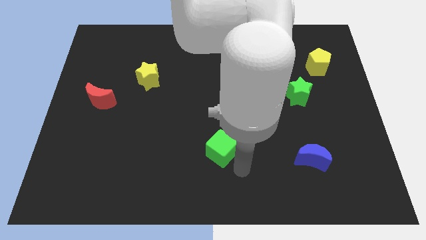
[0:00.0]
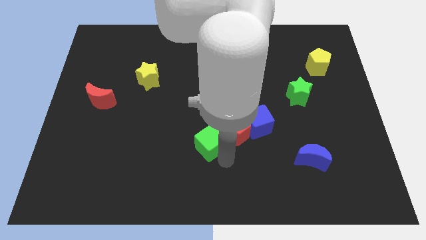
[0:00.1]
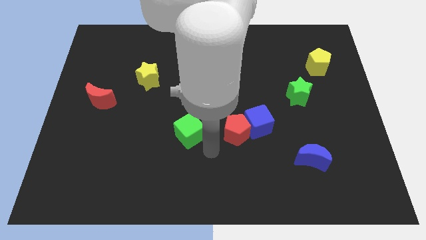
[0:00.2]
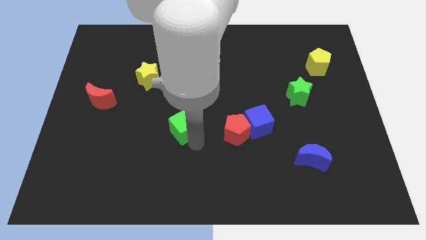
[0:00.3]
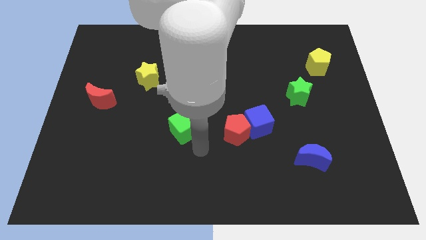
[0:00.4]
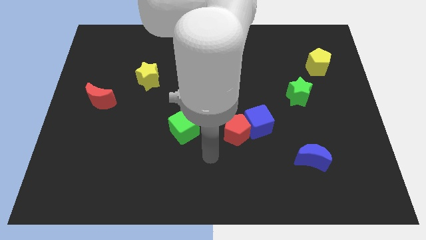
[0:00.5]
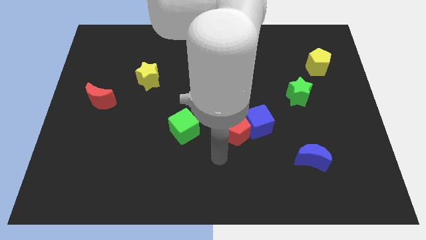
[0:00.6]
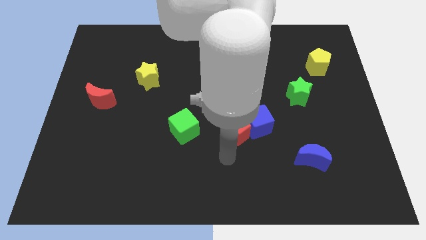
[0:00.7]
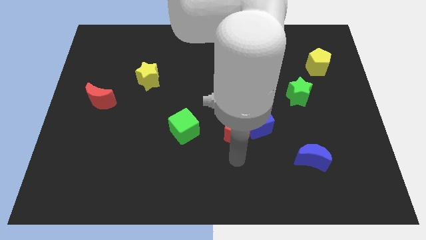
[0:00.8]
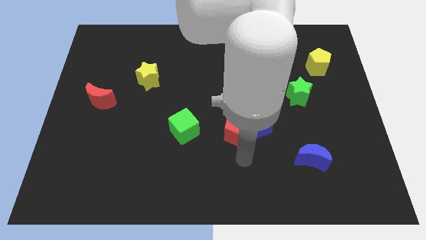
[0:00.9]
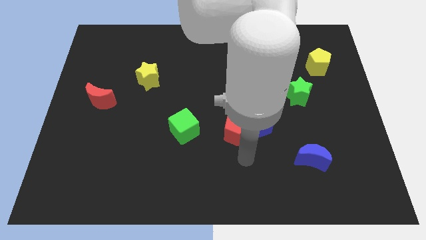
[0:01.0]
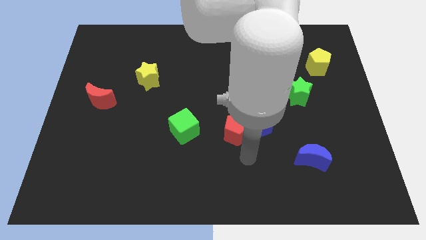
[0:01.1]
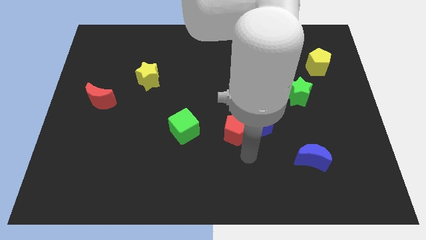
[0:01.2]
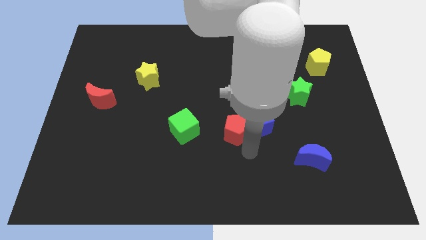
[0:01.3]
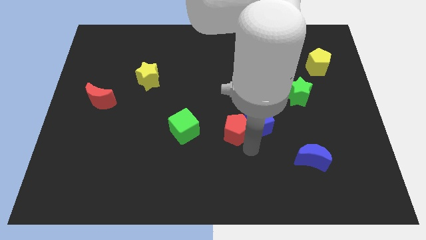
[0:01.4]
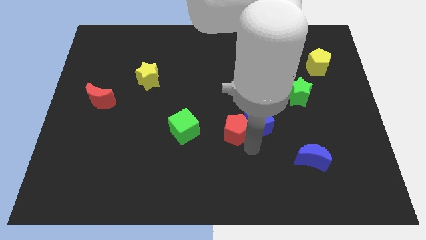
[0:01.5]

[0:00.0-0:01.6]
slide the green cube to the left of red pentagon

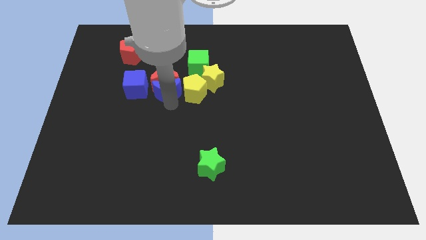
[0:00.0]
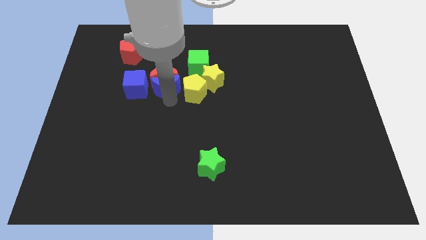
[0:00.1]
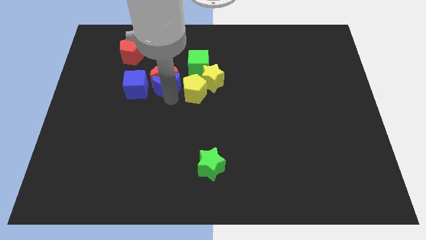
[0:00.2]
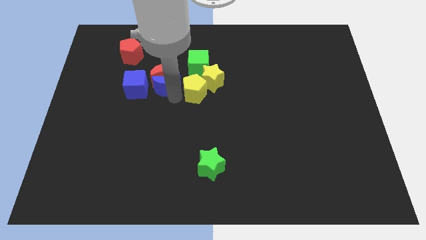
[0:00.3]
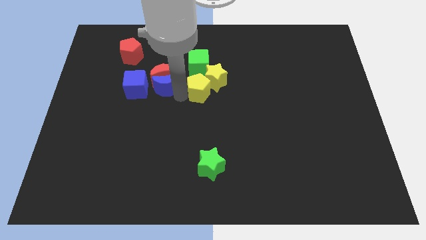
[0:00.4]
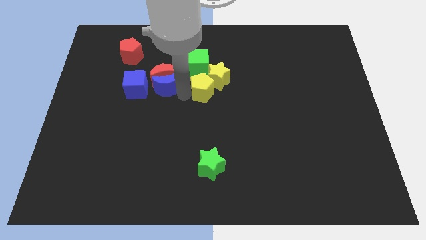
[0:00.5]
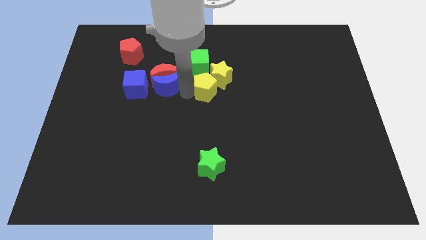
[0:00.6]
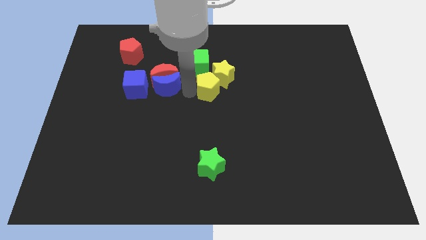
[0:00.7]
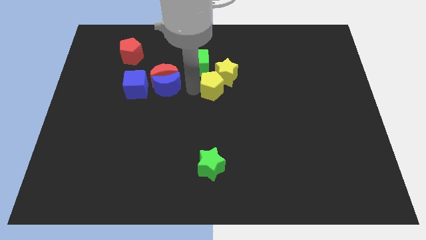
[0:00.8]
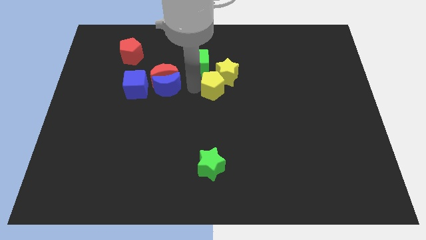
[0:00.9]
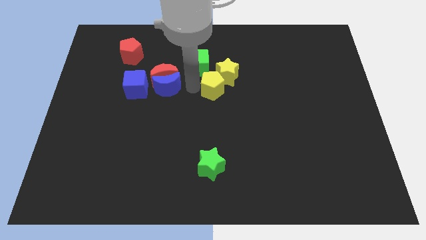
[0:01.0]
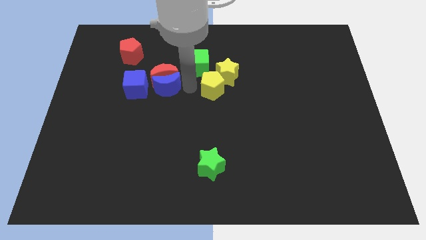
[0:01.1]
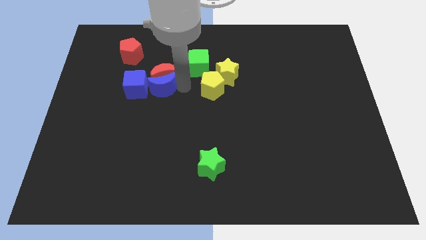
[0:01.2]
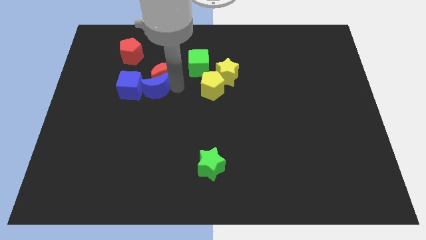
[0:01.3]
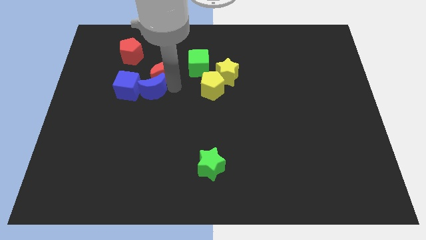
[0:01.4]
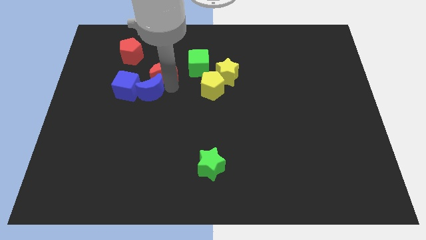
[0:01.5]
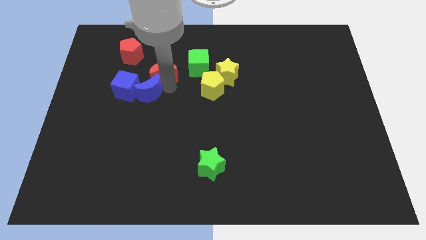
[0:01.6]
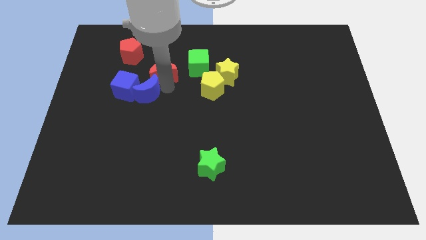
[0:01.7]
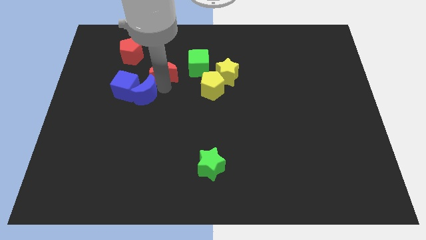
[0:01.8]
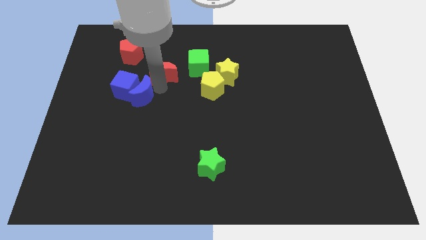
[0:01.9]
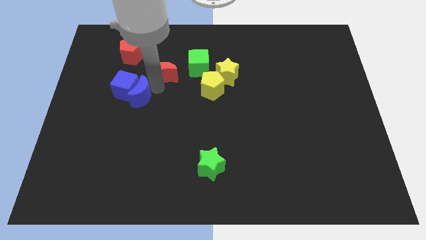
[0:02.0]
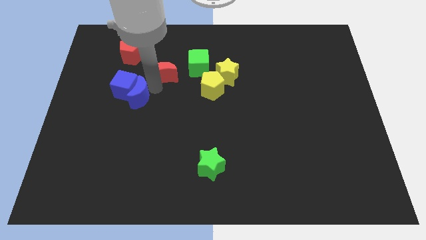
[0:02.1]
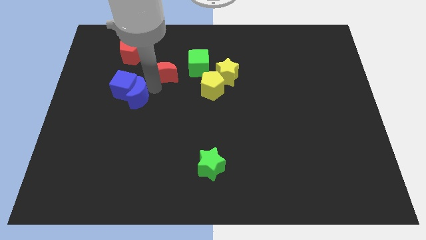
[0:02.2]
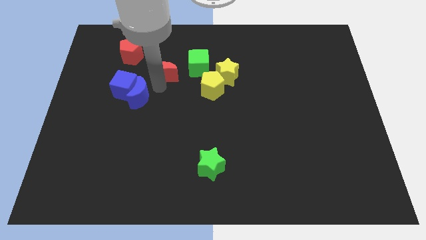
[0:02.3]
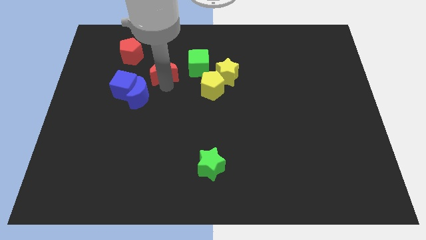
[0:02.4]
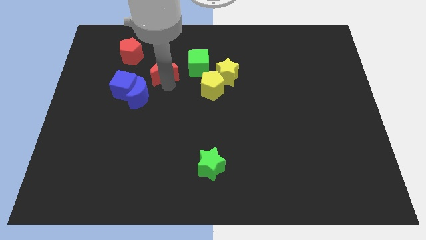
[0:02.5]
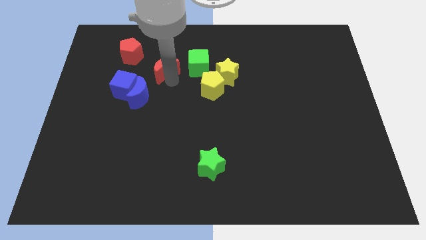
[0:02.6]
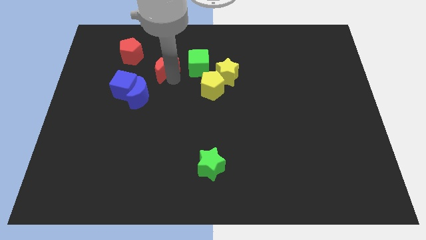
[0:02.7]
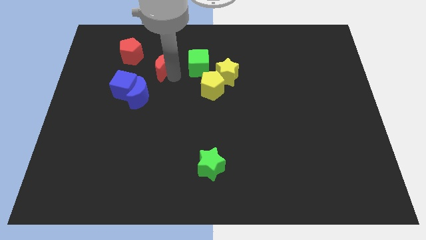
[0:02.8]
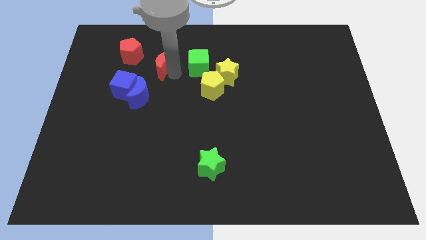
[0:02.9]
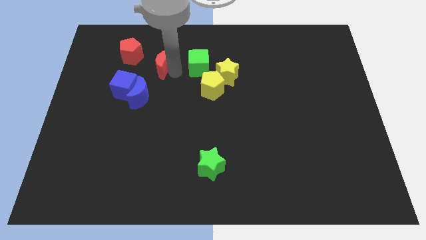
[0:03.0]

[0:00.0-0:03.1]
slightly move the red moon up

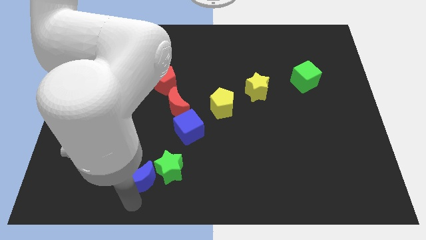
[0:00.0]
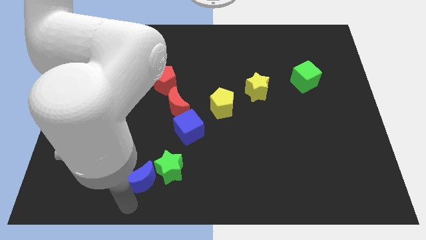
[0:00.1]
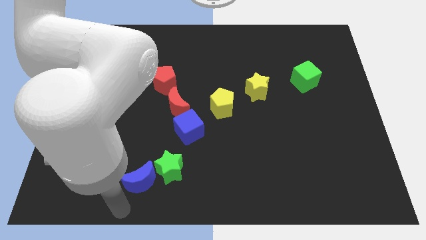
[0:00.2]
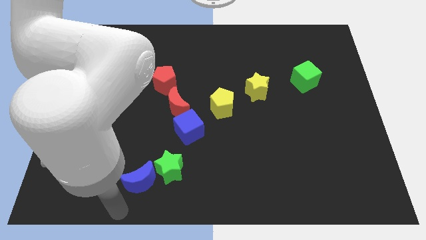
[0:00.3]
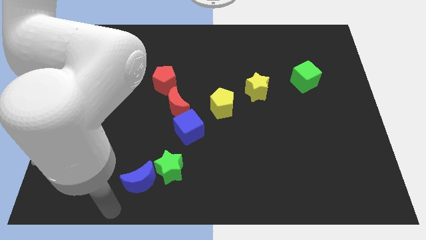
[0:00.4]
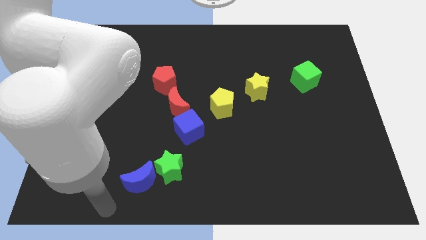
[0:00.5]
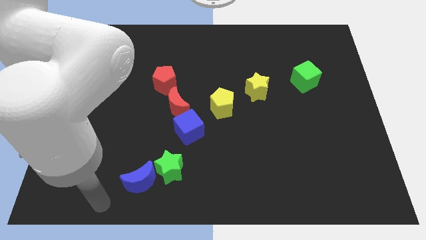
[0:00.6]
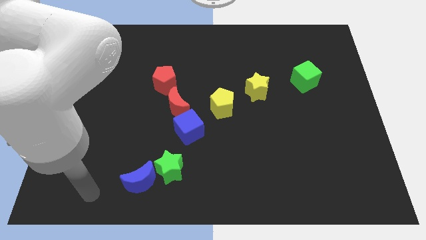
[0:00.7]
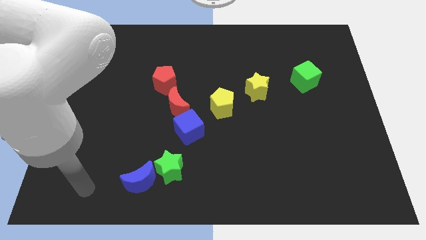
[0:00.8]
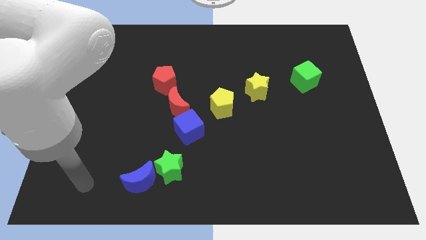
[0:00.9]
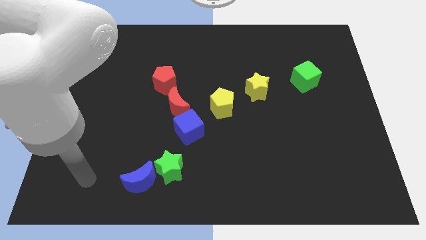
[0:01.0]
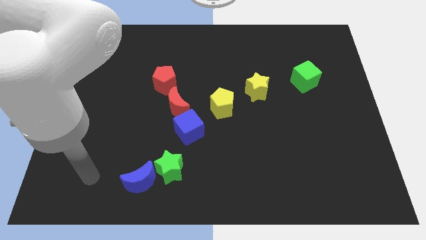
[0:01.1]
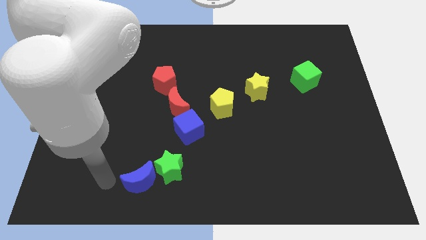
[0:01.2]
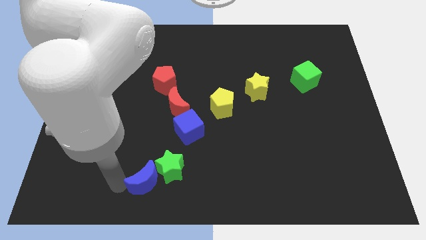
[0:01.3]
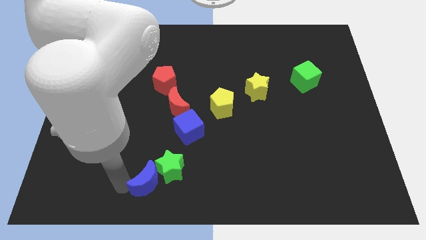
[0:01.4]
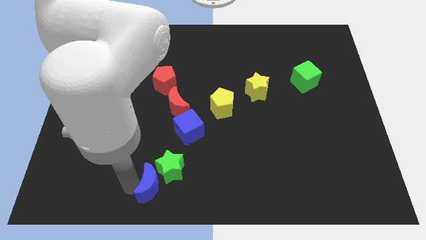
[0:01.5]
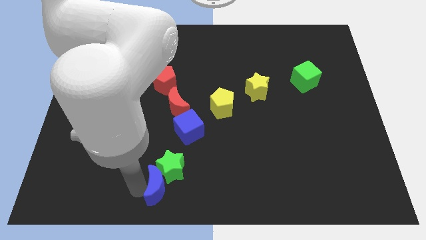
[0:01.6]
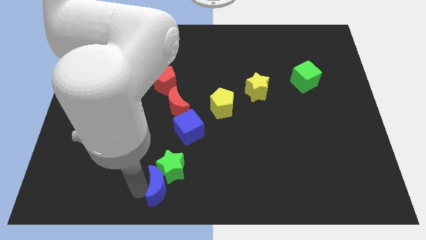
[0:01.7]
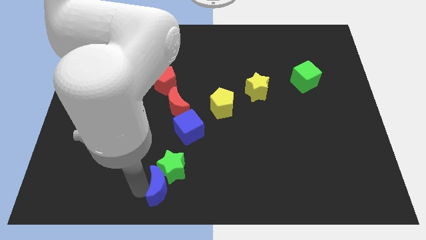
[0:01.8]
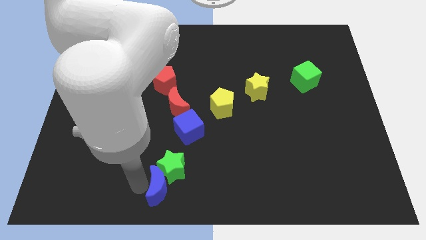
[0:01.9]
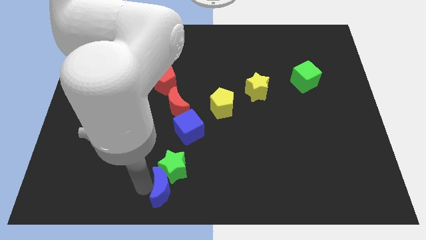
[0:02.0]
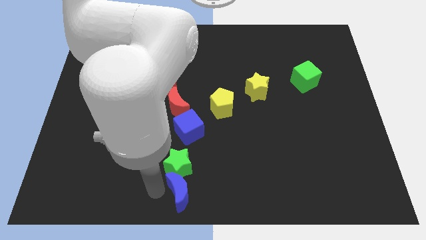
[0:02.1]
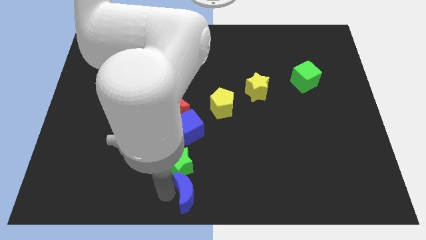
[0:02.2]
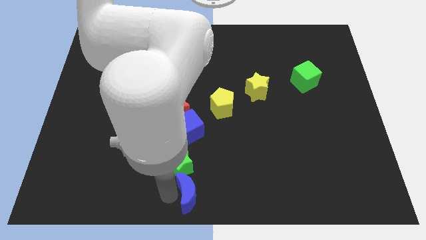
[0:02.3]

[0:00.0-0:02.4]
place the blue moon down to the green star

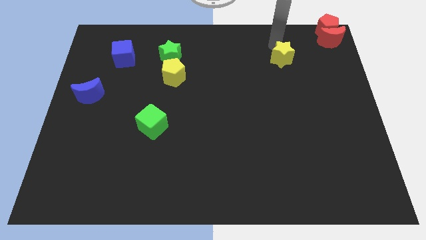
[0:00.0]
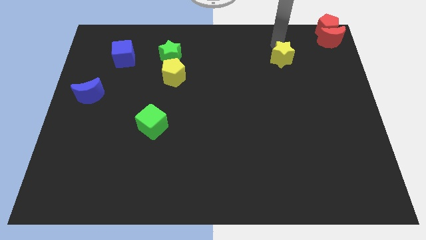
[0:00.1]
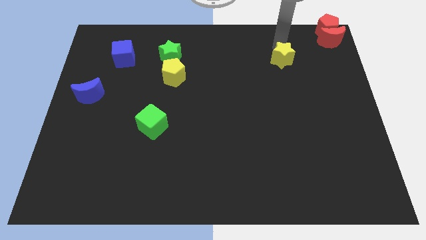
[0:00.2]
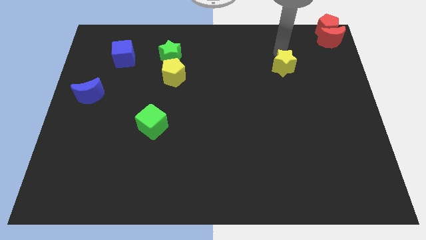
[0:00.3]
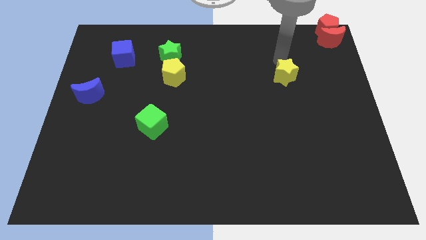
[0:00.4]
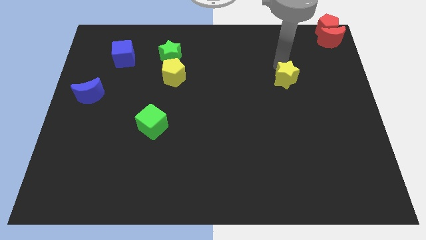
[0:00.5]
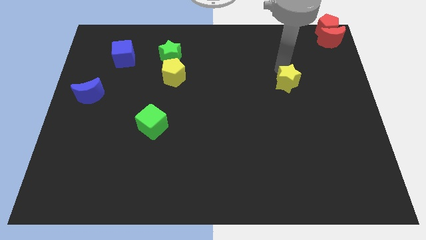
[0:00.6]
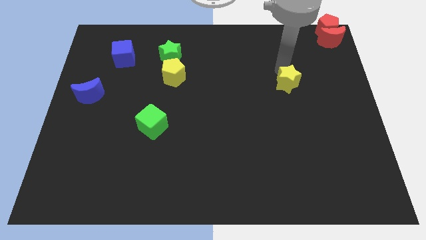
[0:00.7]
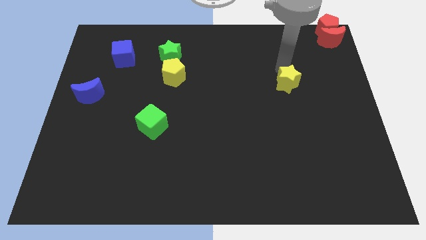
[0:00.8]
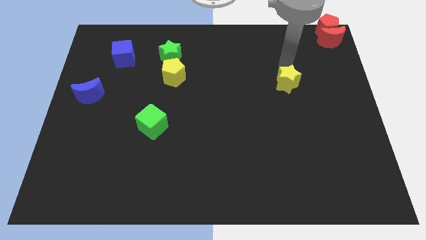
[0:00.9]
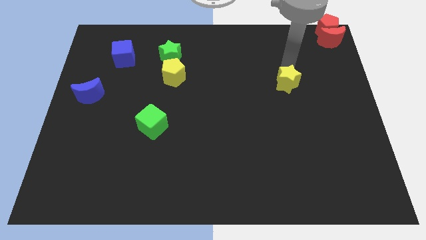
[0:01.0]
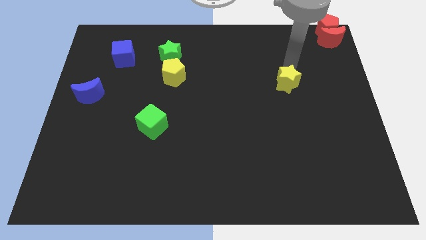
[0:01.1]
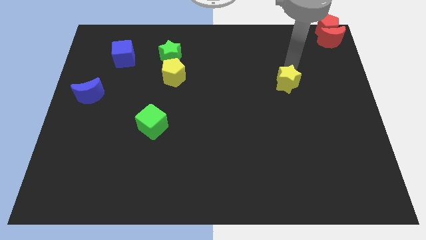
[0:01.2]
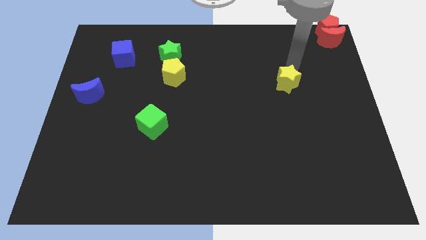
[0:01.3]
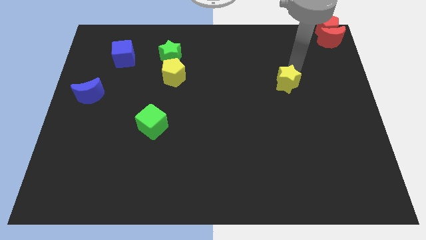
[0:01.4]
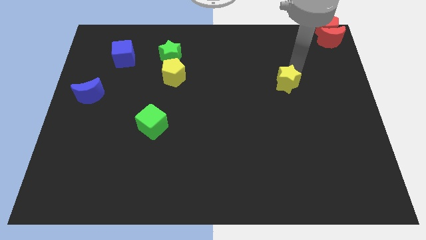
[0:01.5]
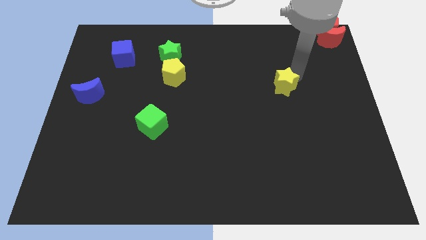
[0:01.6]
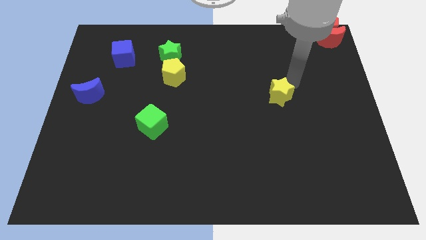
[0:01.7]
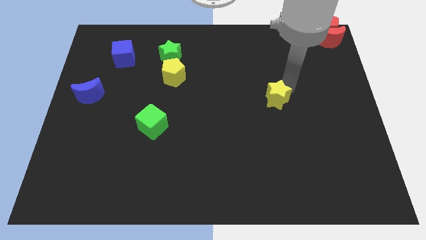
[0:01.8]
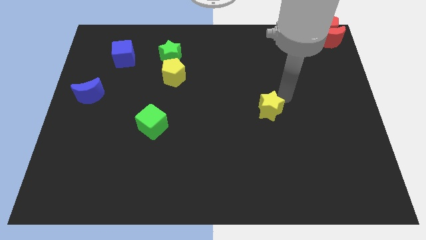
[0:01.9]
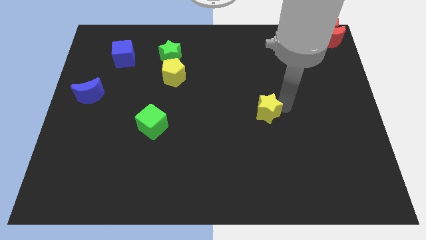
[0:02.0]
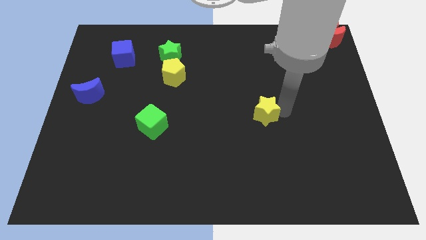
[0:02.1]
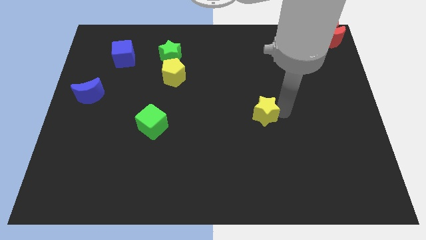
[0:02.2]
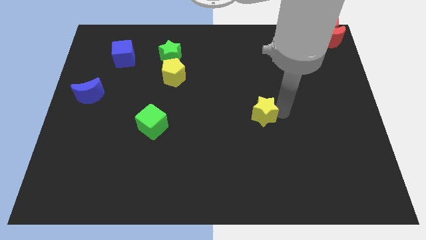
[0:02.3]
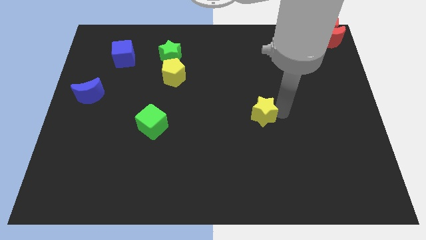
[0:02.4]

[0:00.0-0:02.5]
push the yellow star to the center of the board
